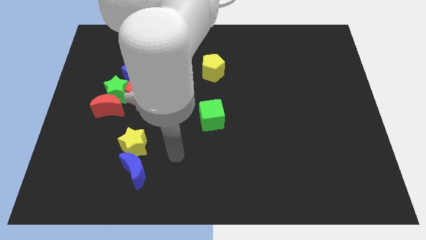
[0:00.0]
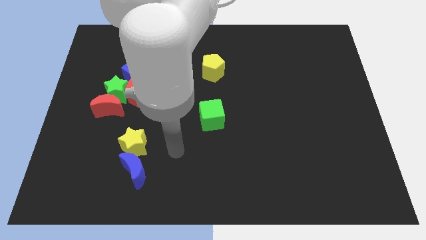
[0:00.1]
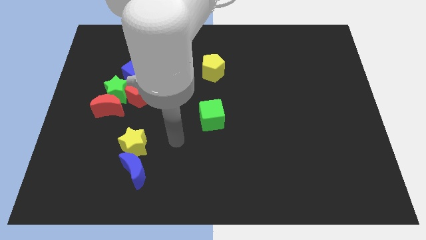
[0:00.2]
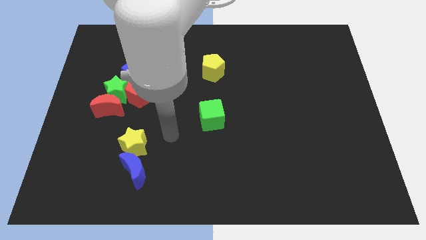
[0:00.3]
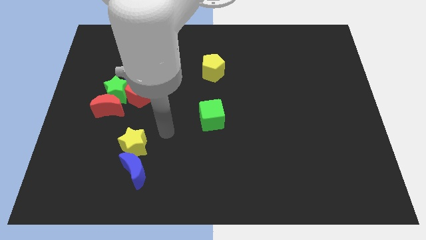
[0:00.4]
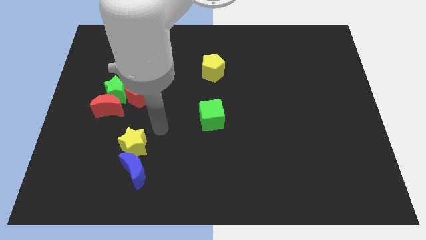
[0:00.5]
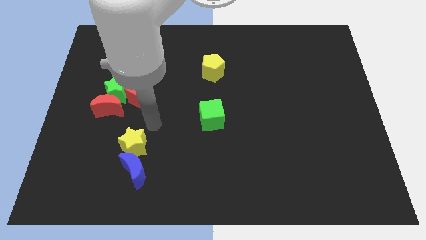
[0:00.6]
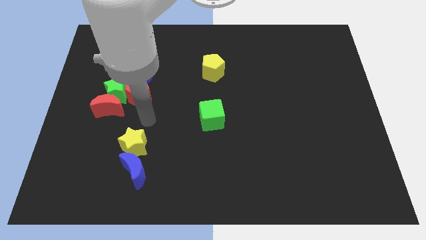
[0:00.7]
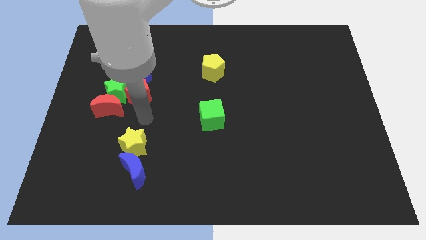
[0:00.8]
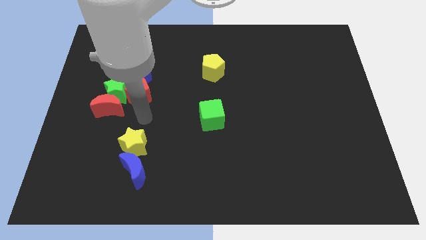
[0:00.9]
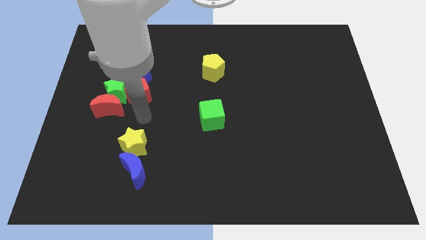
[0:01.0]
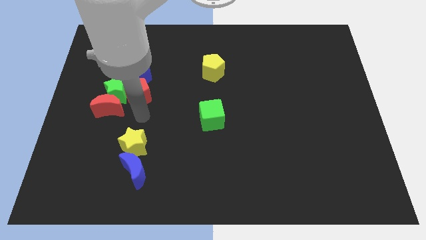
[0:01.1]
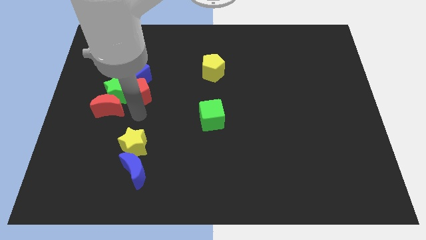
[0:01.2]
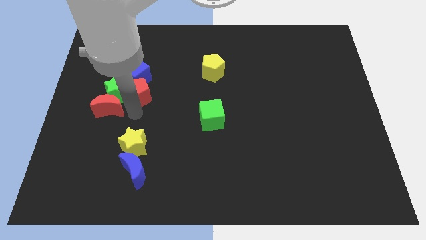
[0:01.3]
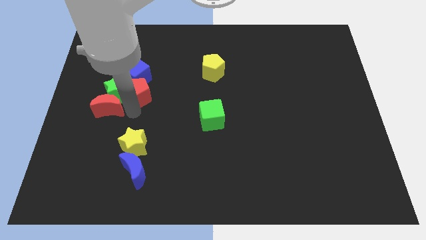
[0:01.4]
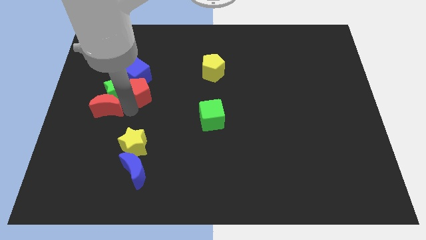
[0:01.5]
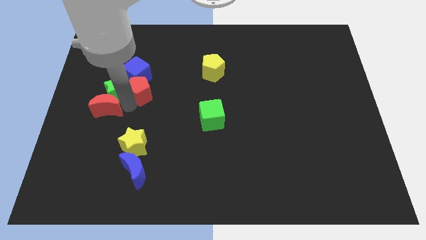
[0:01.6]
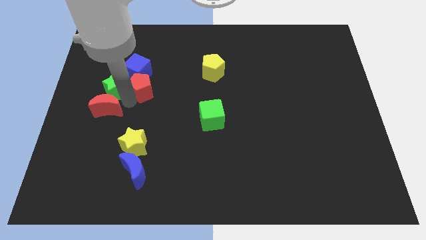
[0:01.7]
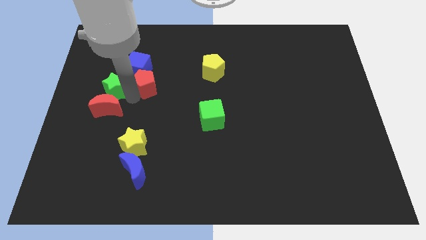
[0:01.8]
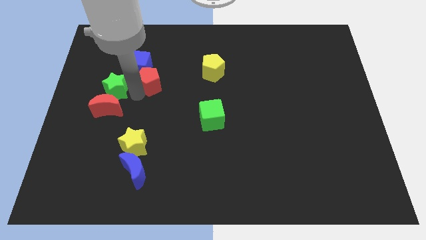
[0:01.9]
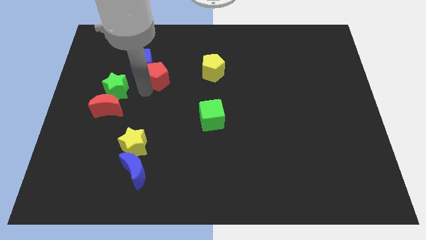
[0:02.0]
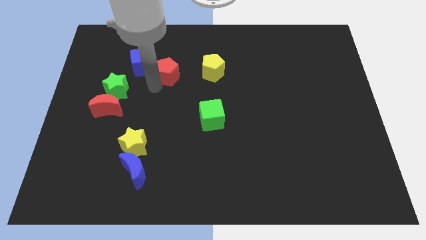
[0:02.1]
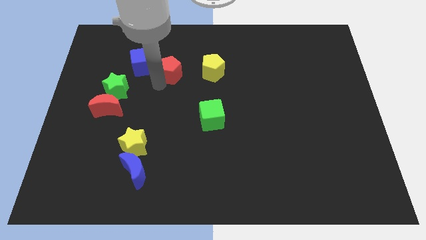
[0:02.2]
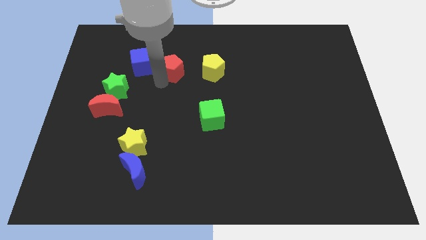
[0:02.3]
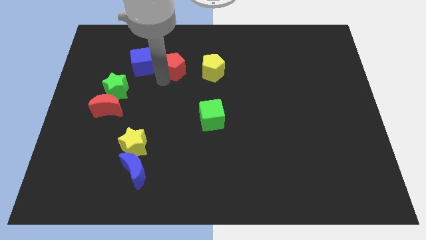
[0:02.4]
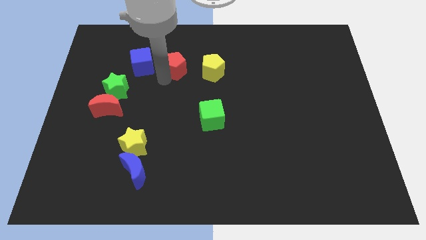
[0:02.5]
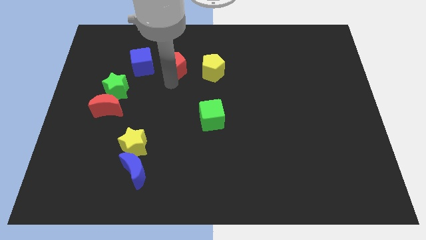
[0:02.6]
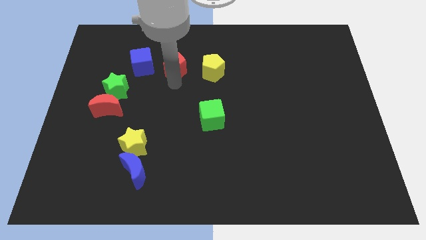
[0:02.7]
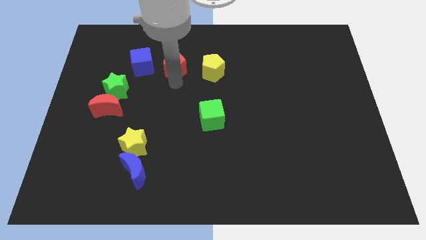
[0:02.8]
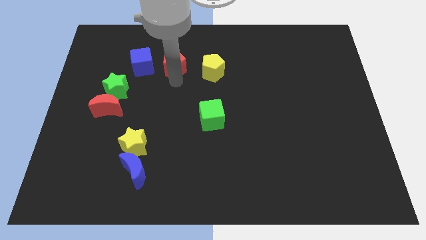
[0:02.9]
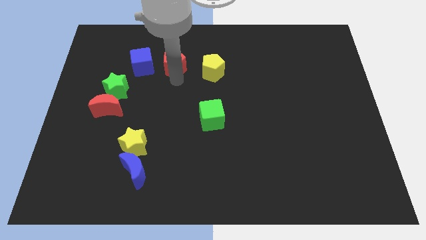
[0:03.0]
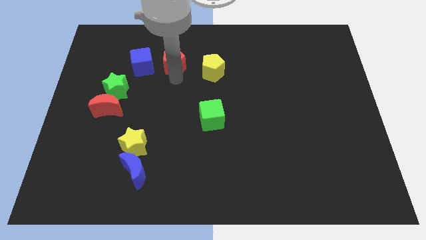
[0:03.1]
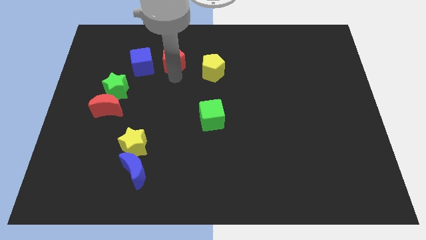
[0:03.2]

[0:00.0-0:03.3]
slide the red pentagon between the blue cube and yellow pentagon

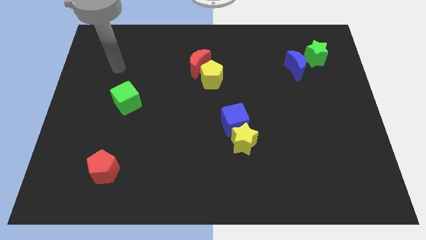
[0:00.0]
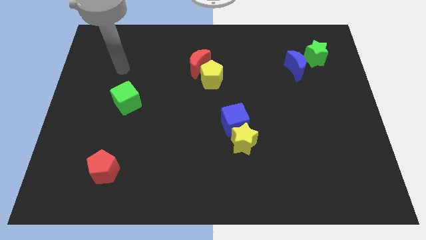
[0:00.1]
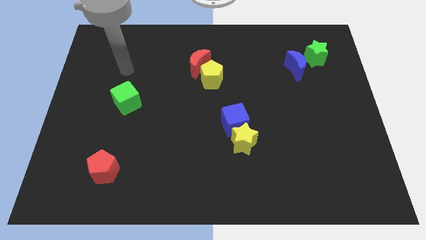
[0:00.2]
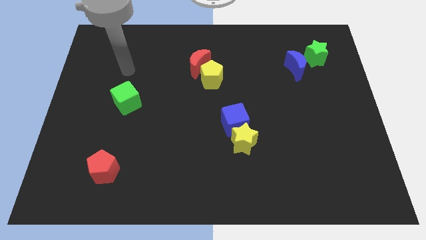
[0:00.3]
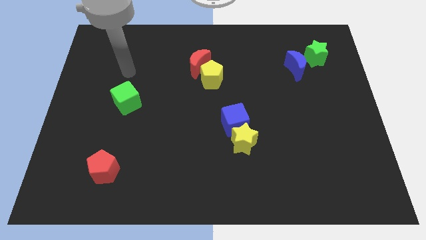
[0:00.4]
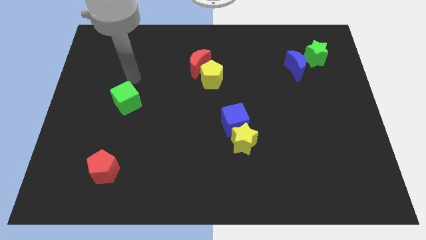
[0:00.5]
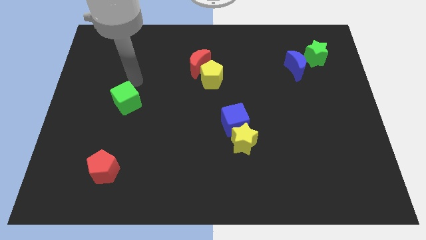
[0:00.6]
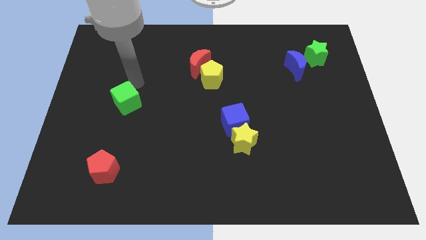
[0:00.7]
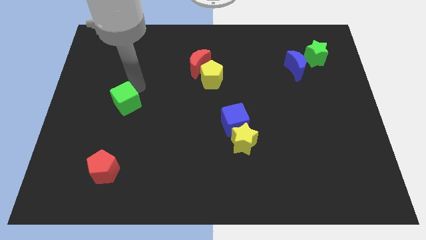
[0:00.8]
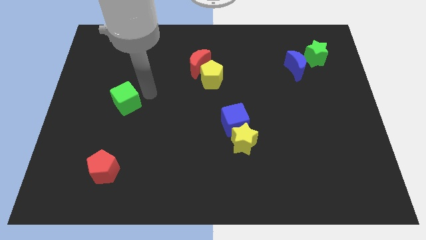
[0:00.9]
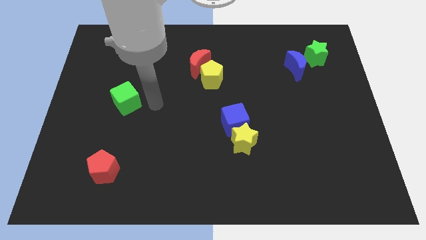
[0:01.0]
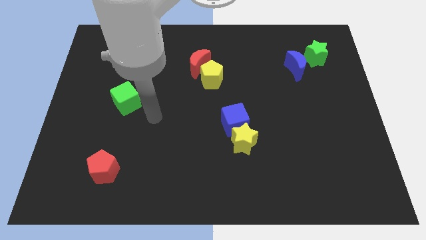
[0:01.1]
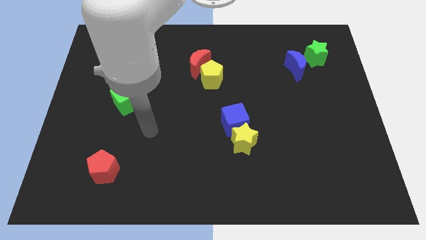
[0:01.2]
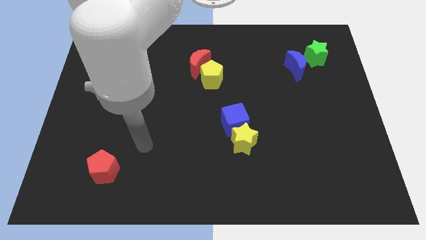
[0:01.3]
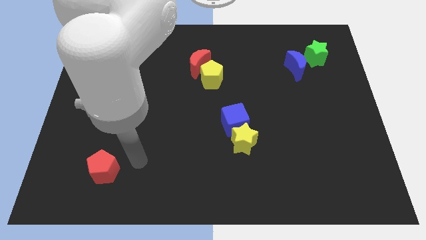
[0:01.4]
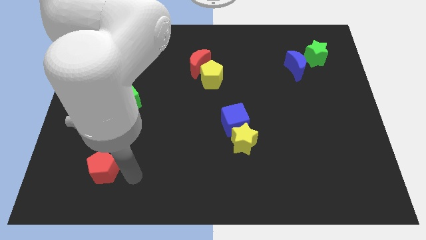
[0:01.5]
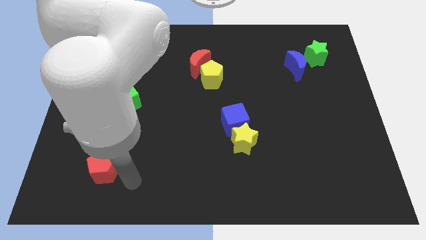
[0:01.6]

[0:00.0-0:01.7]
move your hand towards the bottom side of the board

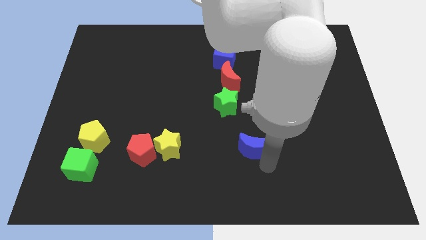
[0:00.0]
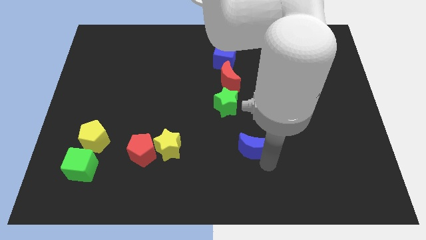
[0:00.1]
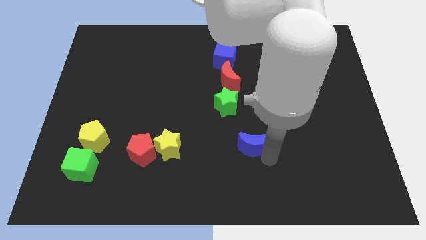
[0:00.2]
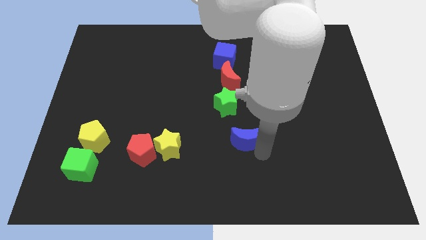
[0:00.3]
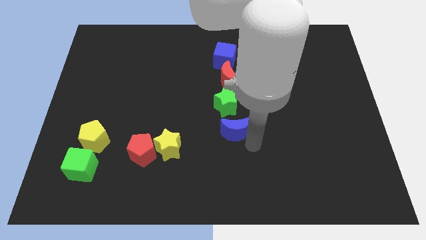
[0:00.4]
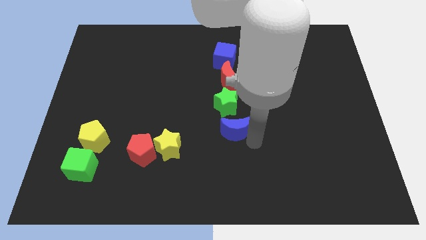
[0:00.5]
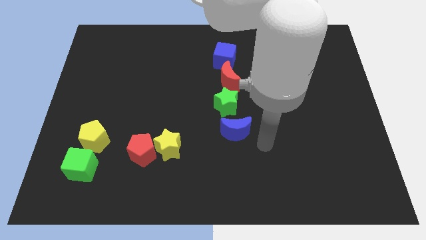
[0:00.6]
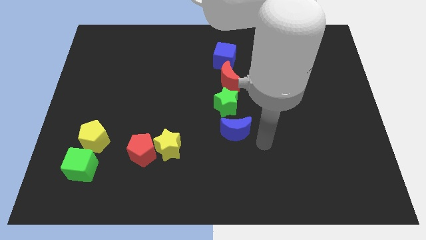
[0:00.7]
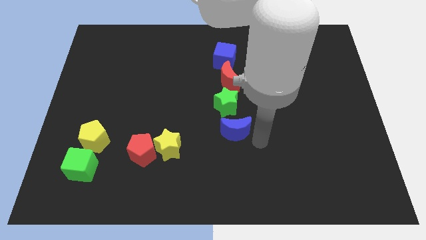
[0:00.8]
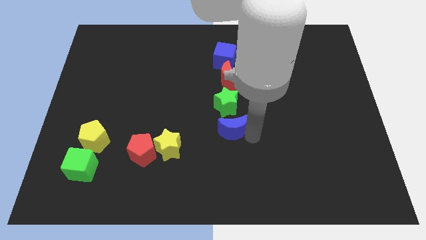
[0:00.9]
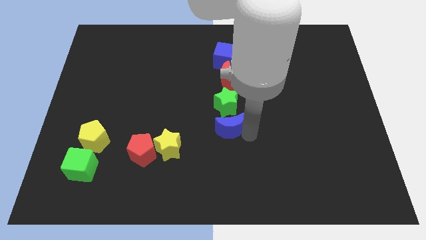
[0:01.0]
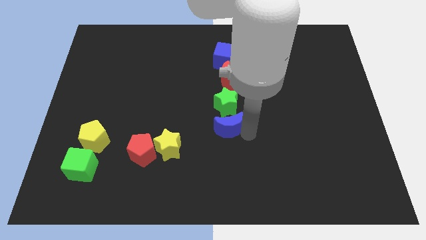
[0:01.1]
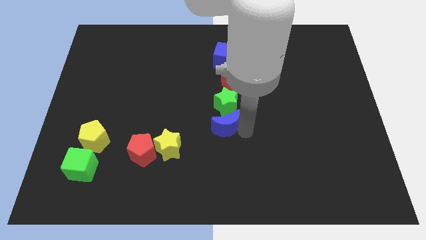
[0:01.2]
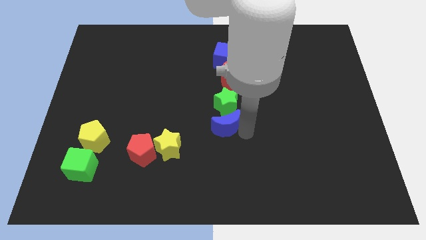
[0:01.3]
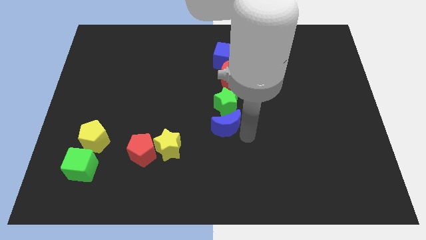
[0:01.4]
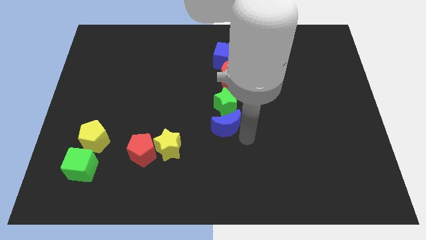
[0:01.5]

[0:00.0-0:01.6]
place the blue crescent below the green star to form a vertical line

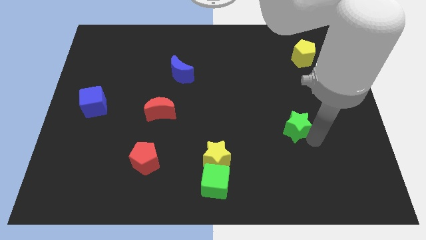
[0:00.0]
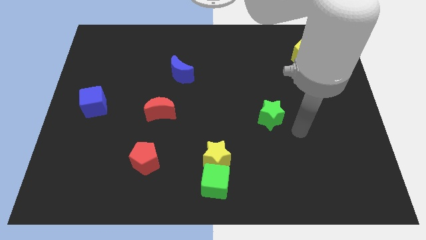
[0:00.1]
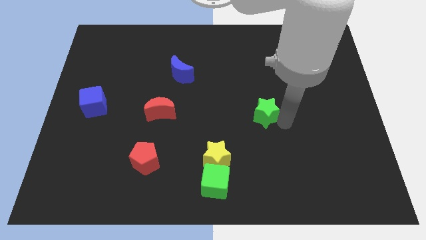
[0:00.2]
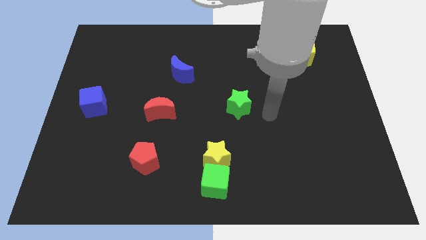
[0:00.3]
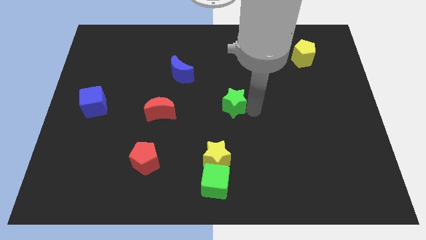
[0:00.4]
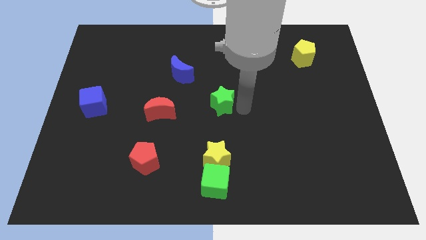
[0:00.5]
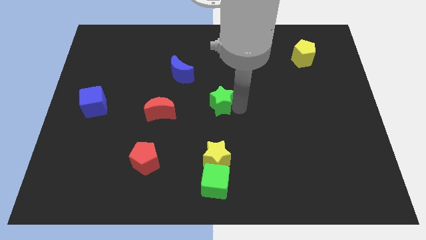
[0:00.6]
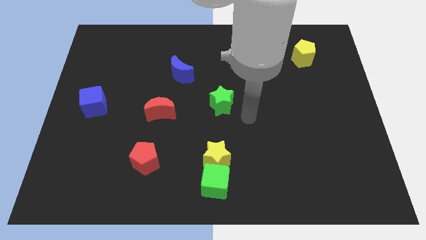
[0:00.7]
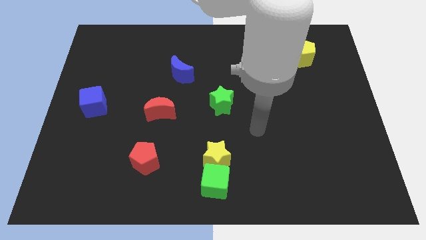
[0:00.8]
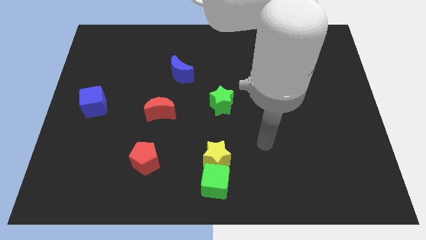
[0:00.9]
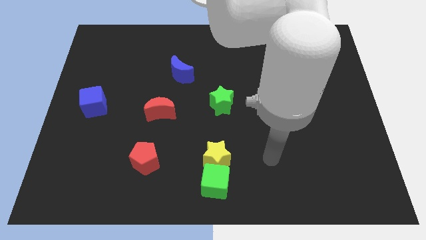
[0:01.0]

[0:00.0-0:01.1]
move green star middle of the board

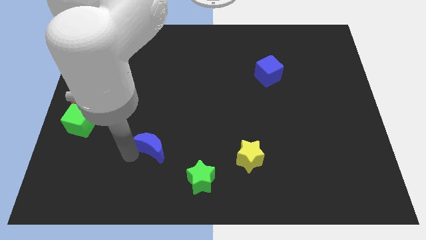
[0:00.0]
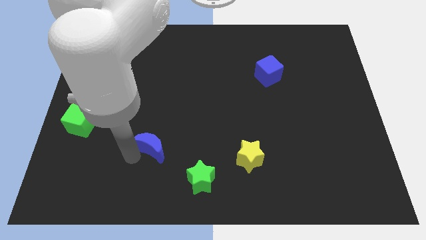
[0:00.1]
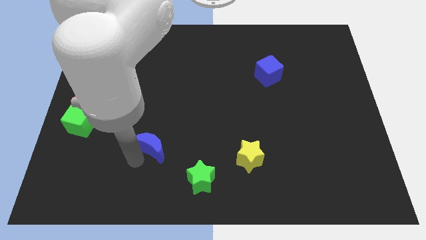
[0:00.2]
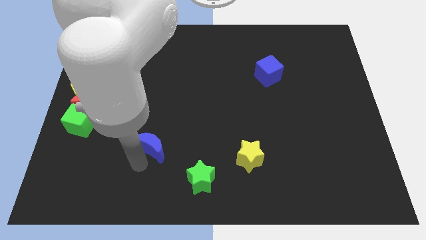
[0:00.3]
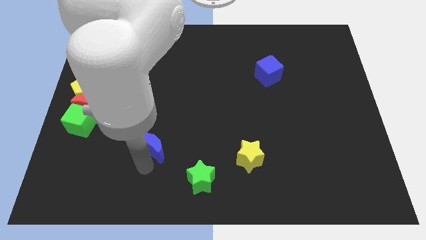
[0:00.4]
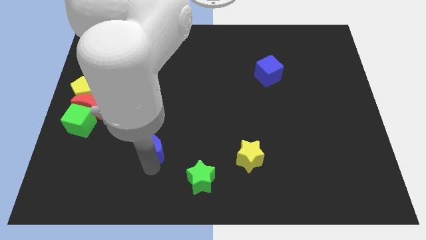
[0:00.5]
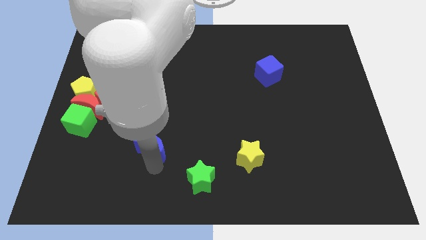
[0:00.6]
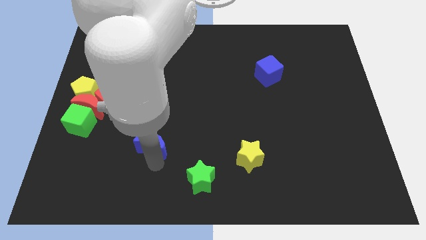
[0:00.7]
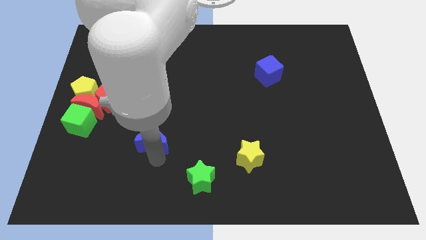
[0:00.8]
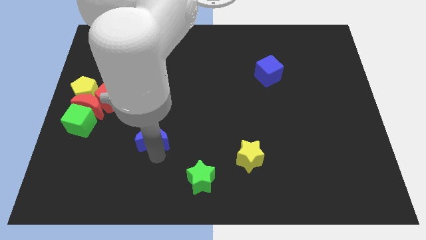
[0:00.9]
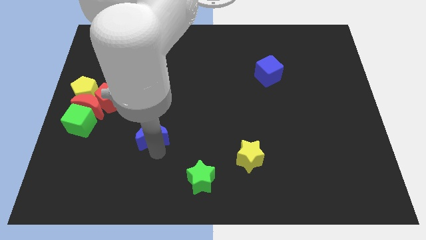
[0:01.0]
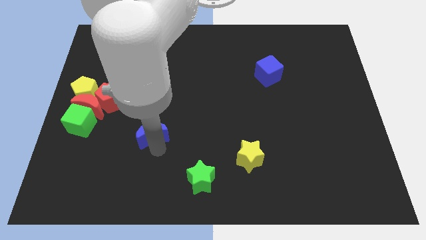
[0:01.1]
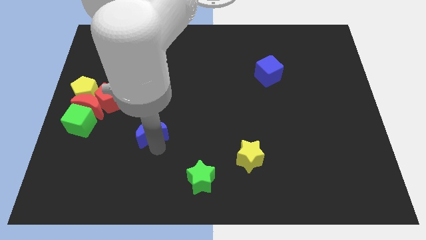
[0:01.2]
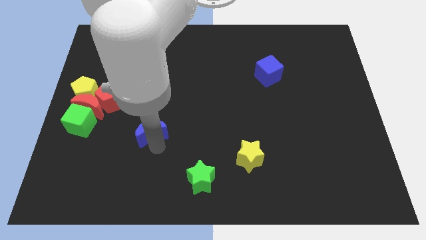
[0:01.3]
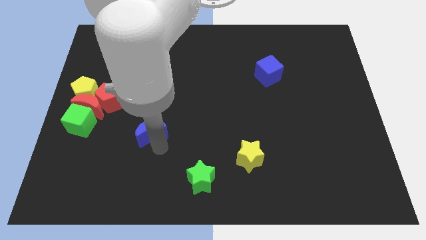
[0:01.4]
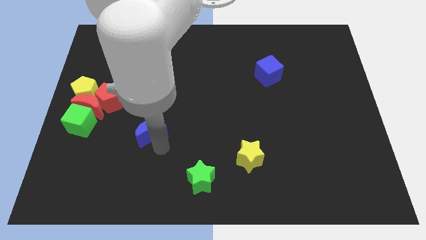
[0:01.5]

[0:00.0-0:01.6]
push the blue crescent slightly towards up
